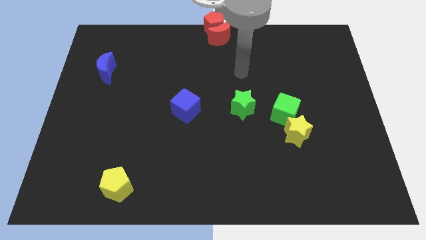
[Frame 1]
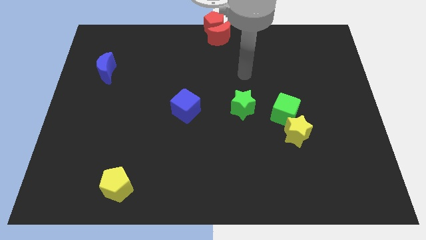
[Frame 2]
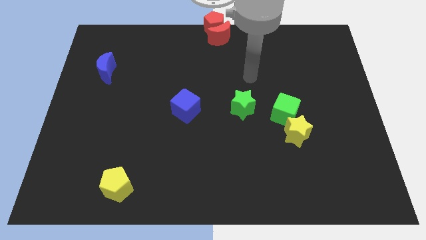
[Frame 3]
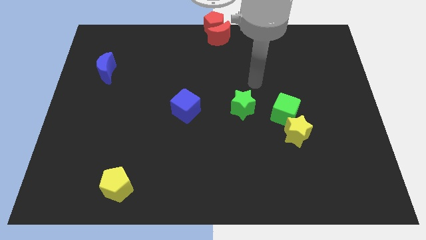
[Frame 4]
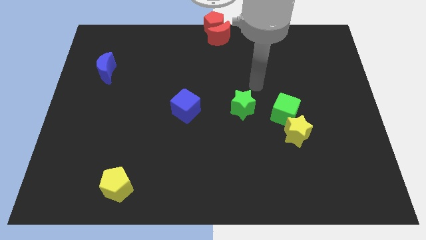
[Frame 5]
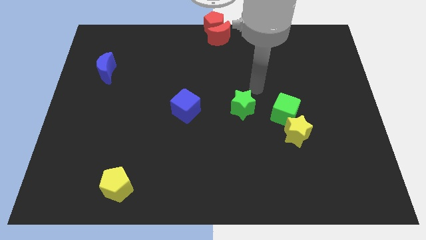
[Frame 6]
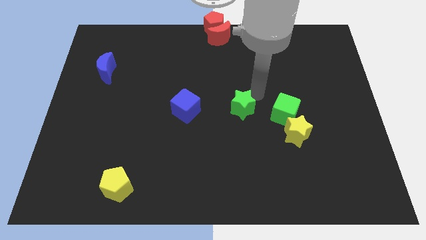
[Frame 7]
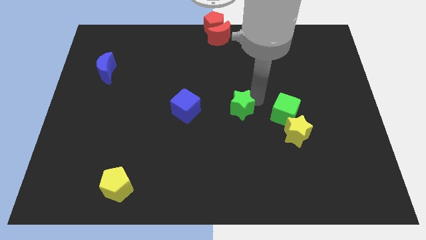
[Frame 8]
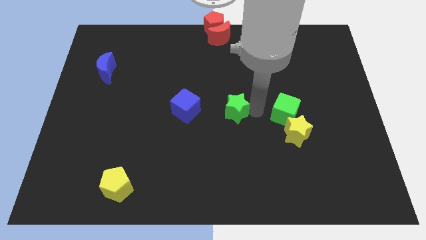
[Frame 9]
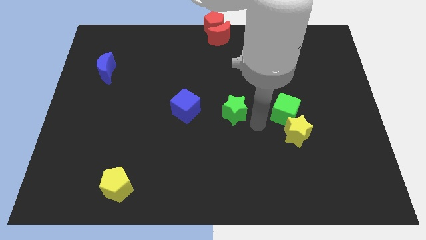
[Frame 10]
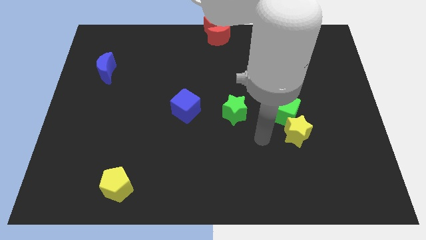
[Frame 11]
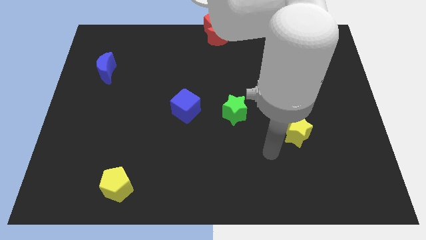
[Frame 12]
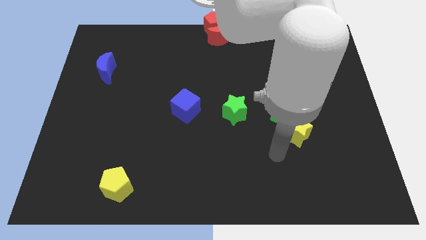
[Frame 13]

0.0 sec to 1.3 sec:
tap at the right side of the green star

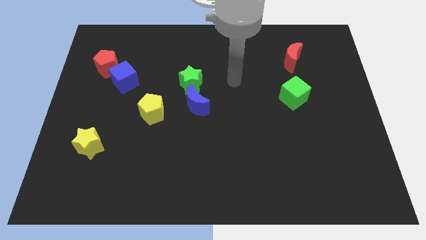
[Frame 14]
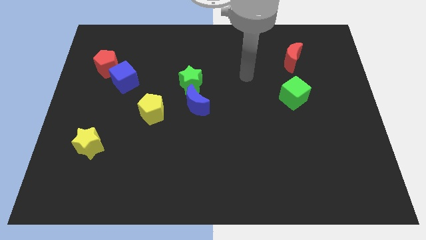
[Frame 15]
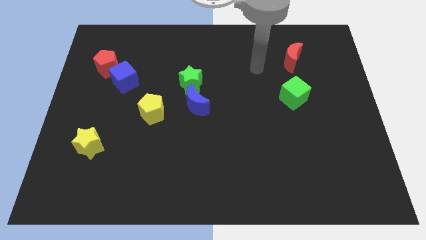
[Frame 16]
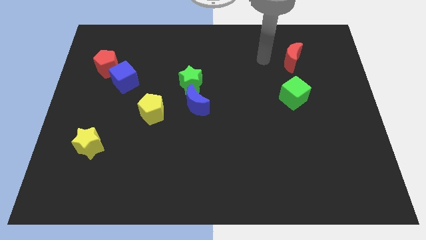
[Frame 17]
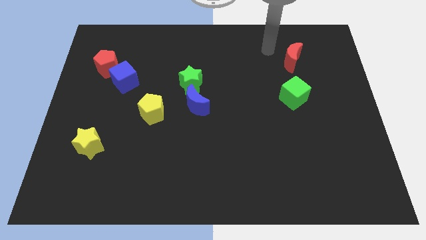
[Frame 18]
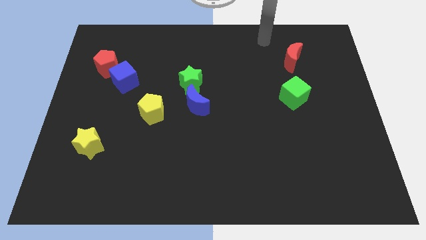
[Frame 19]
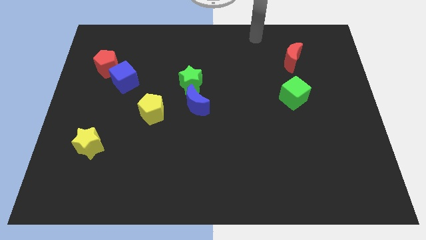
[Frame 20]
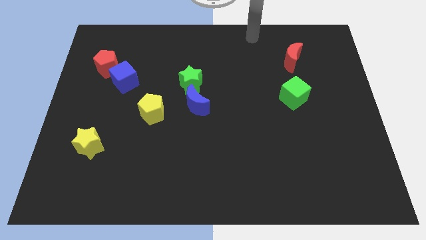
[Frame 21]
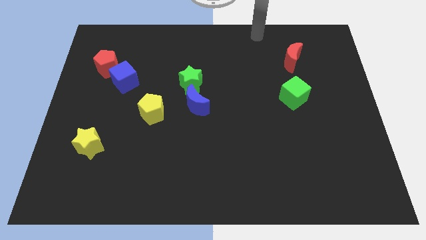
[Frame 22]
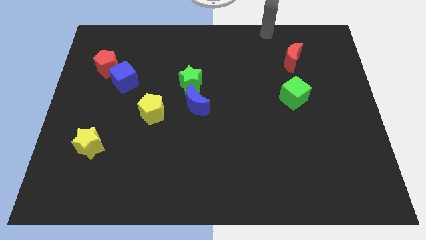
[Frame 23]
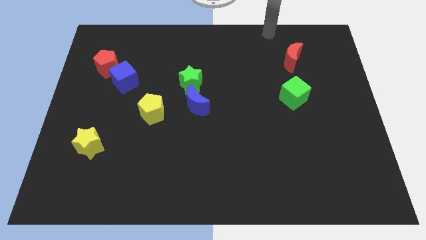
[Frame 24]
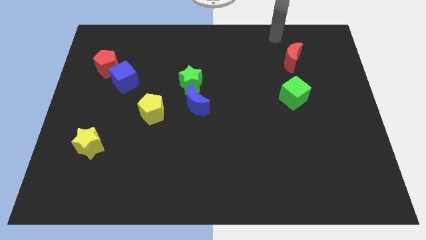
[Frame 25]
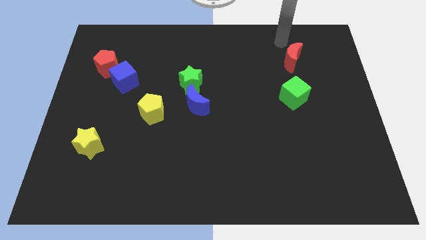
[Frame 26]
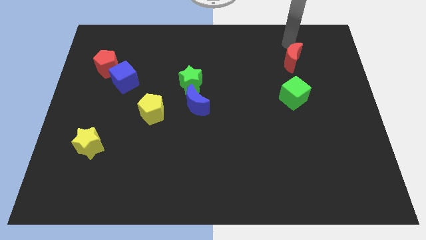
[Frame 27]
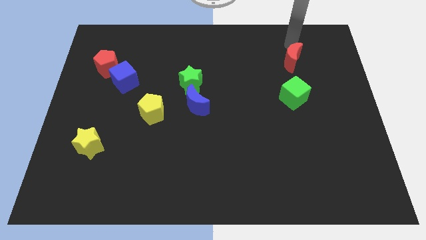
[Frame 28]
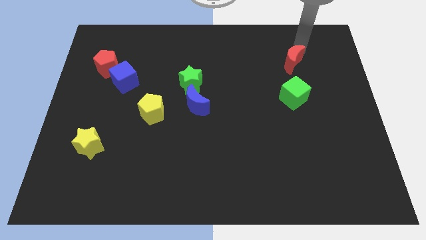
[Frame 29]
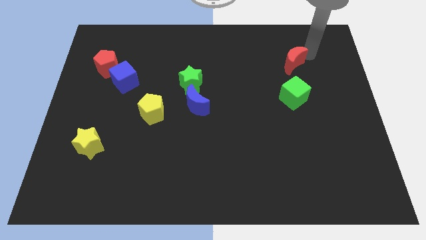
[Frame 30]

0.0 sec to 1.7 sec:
place your hand above the red crescent

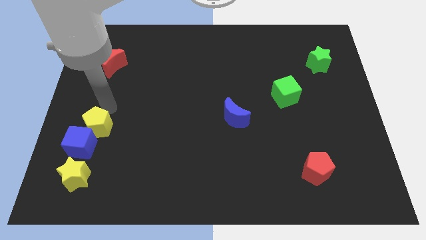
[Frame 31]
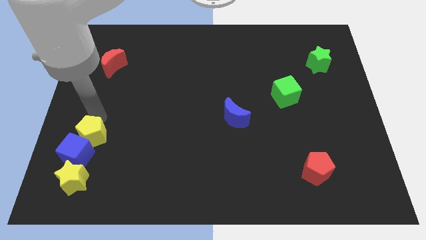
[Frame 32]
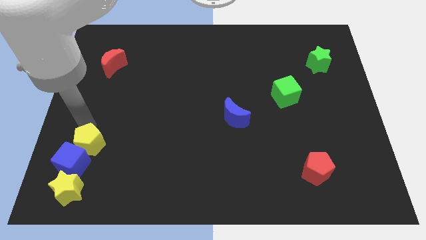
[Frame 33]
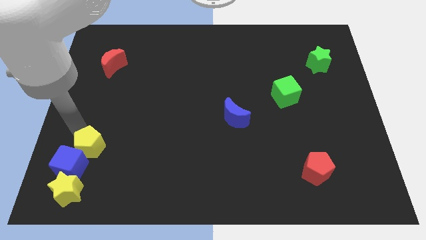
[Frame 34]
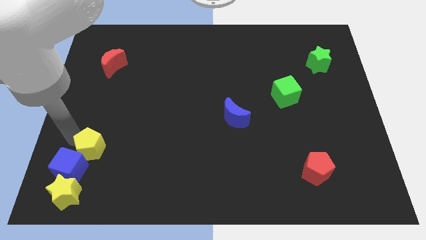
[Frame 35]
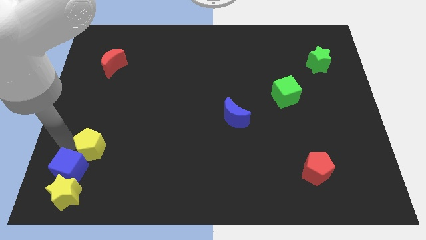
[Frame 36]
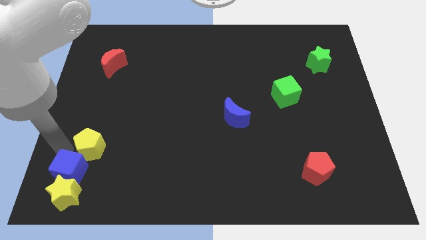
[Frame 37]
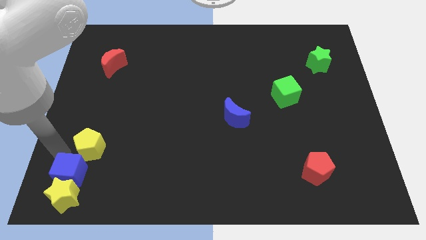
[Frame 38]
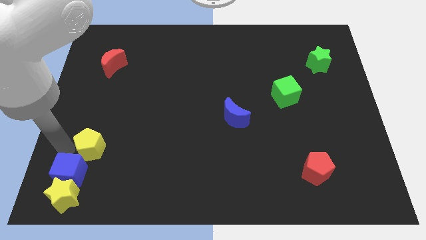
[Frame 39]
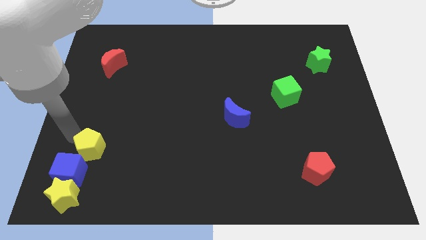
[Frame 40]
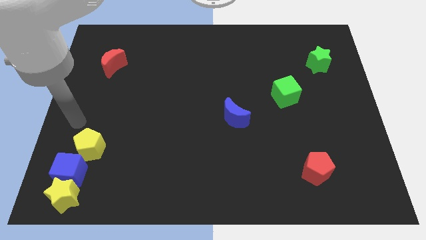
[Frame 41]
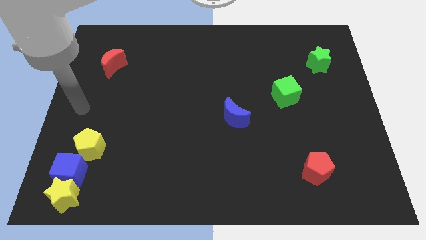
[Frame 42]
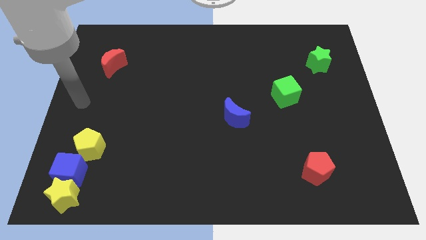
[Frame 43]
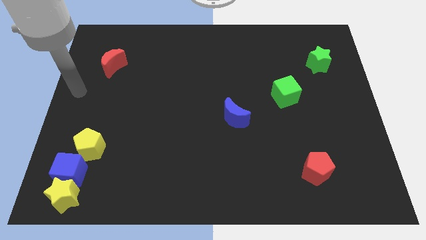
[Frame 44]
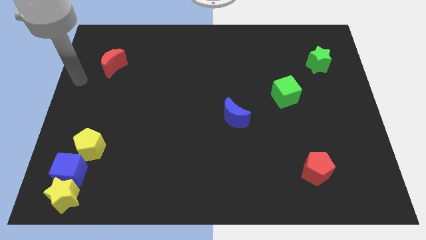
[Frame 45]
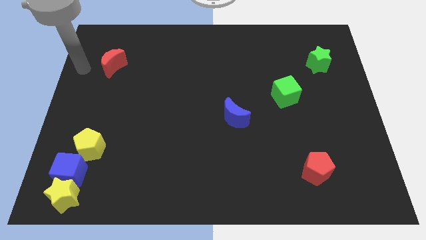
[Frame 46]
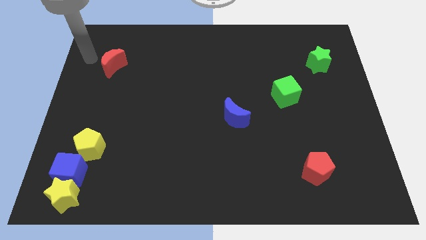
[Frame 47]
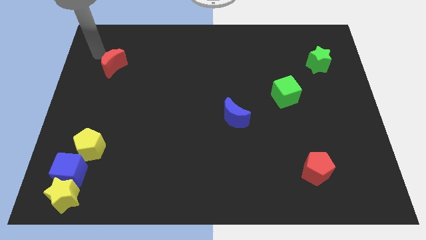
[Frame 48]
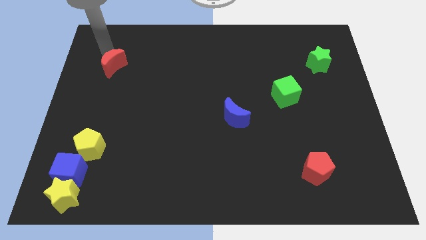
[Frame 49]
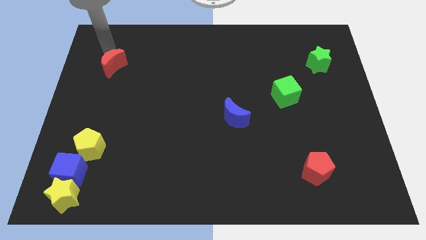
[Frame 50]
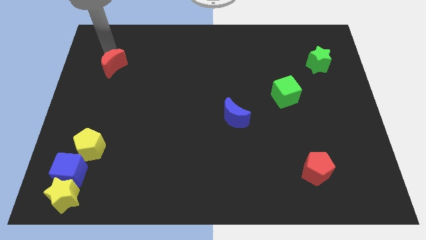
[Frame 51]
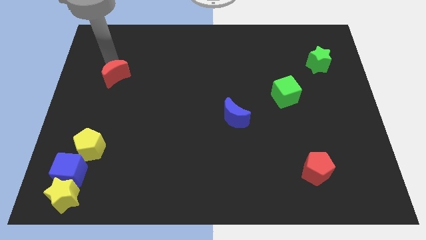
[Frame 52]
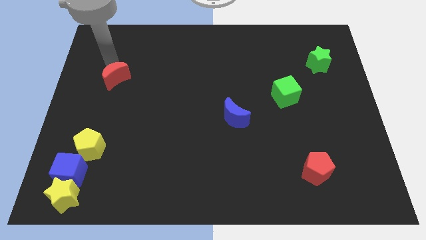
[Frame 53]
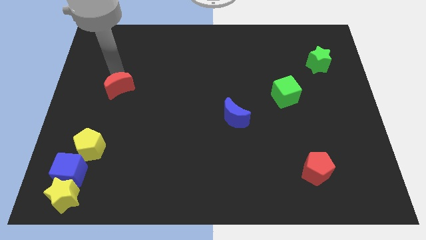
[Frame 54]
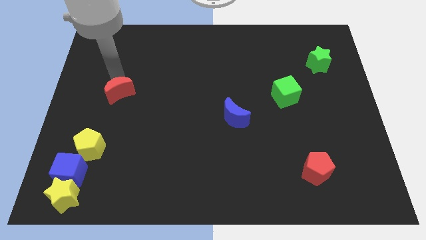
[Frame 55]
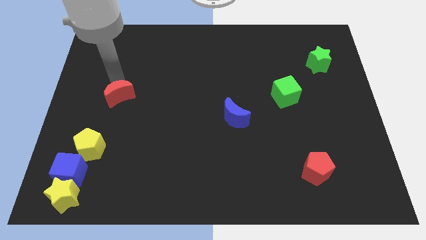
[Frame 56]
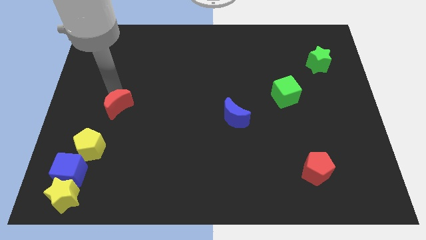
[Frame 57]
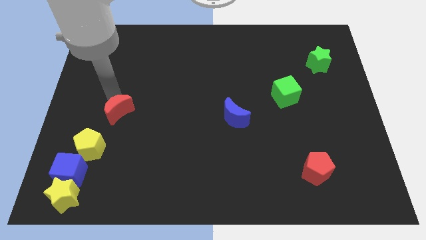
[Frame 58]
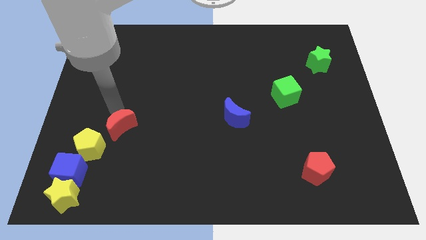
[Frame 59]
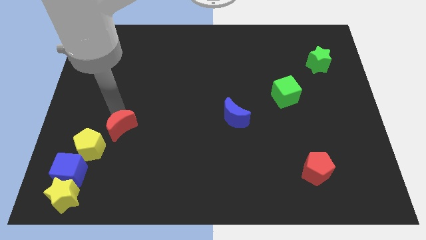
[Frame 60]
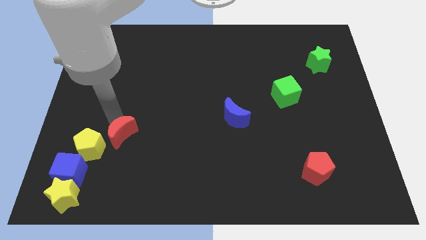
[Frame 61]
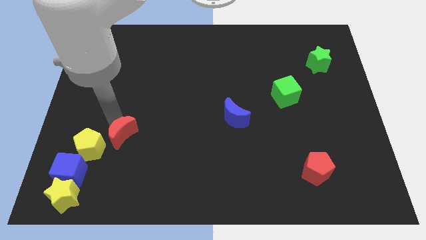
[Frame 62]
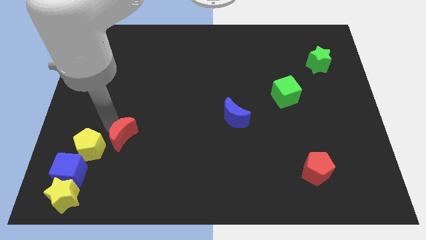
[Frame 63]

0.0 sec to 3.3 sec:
place red moon to the right of yellow pentagon

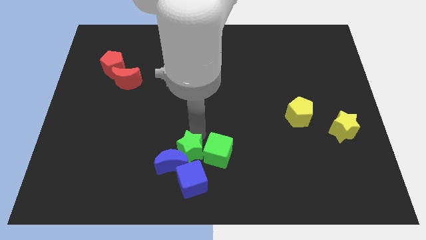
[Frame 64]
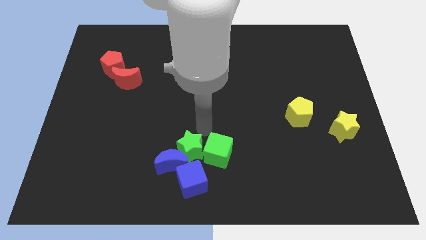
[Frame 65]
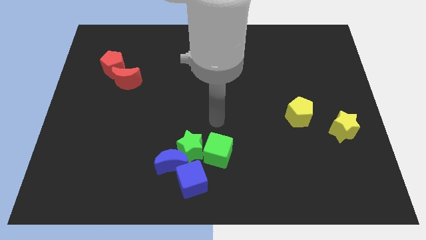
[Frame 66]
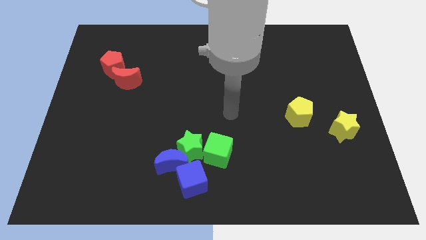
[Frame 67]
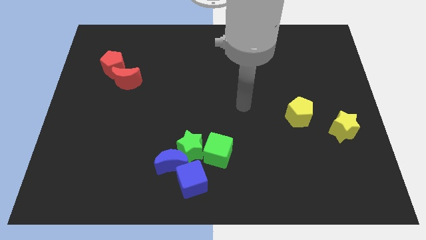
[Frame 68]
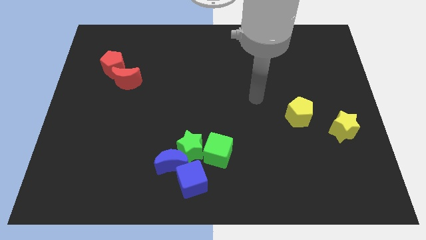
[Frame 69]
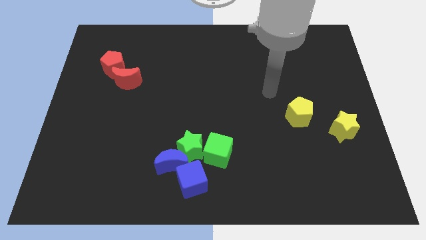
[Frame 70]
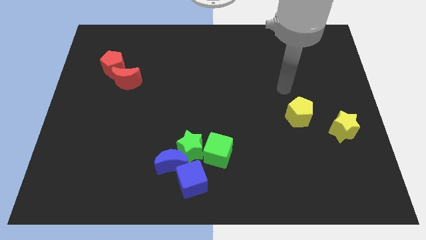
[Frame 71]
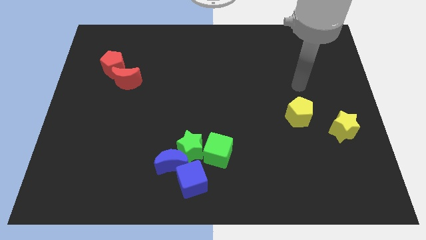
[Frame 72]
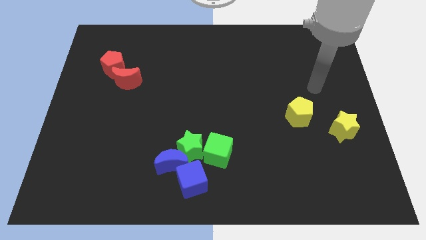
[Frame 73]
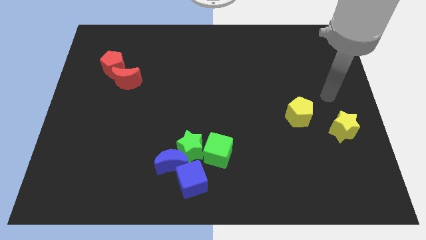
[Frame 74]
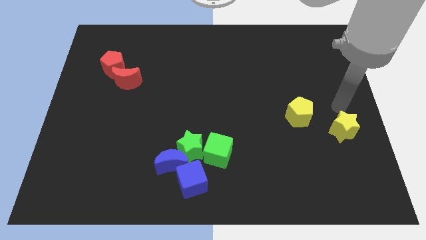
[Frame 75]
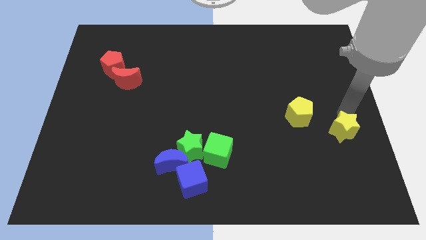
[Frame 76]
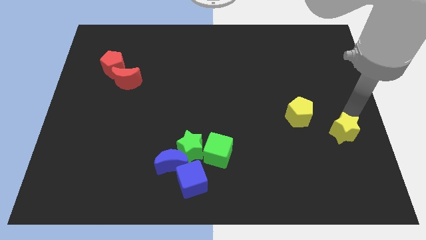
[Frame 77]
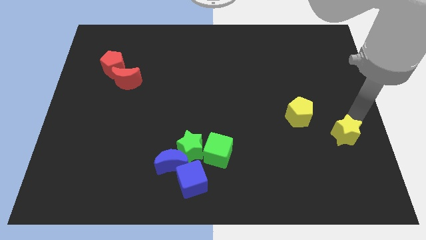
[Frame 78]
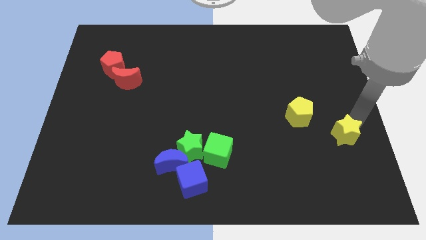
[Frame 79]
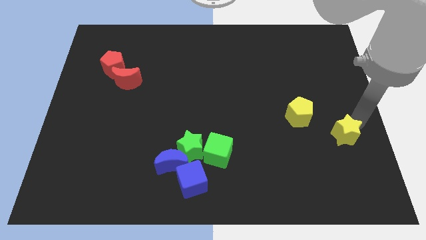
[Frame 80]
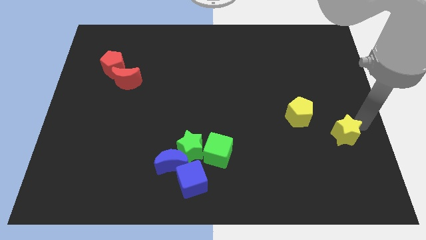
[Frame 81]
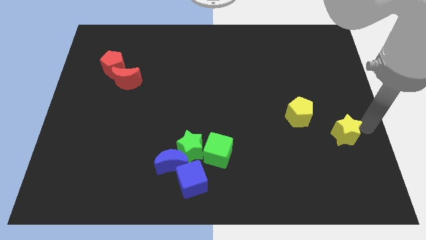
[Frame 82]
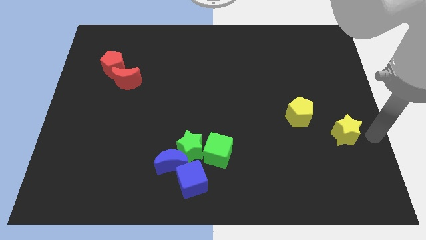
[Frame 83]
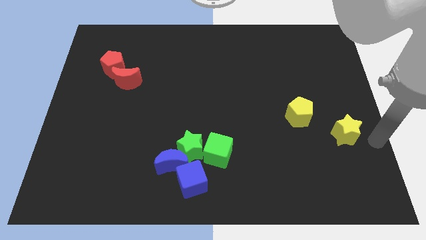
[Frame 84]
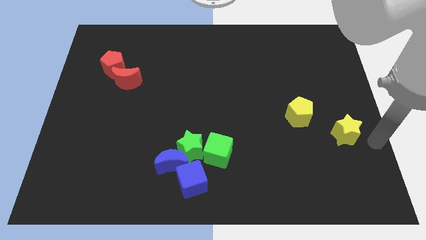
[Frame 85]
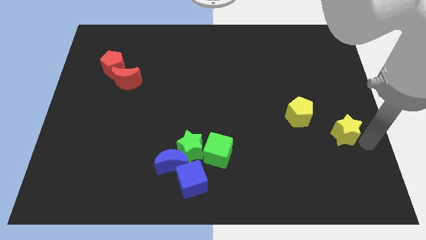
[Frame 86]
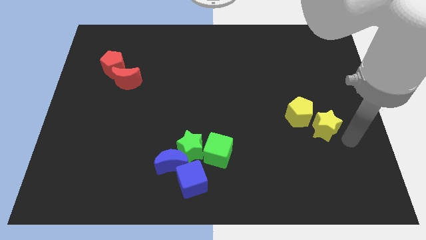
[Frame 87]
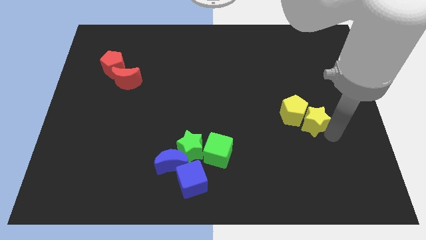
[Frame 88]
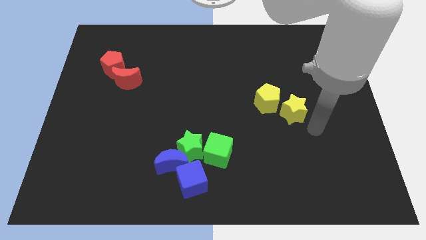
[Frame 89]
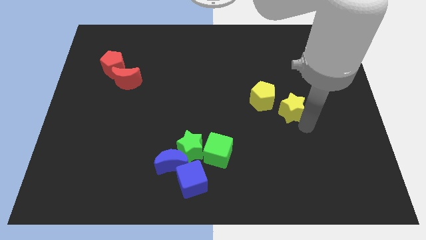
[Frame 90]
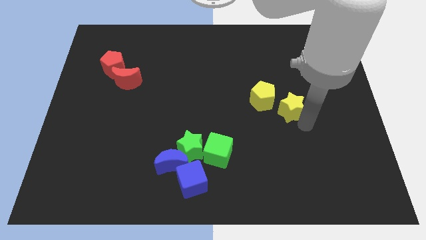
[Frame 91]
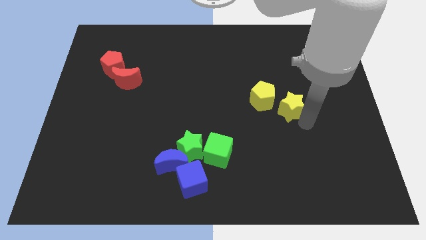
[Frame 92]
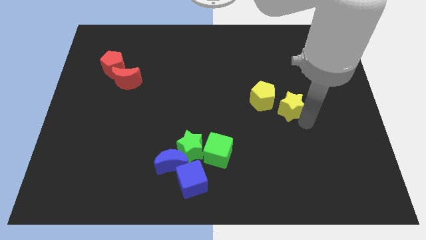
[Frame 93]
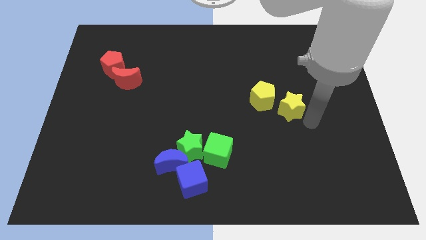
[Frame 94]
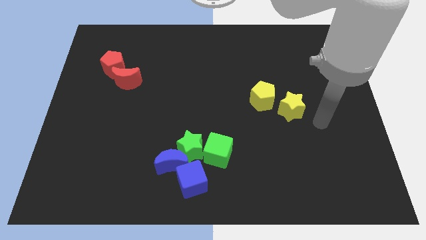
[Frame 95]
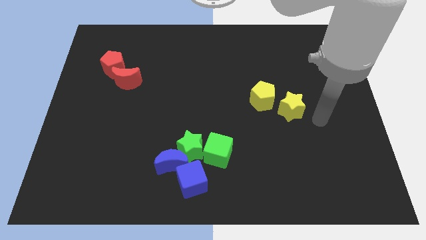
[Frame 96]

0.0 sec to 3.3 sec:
move the arm away from the green star
